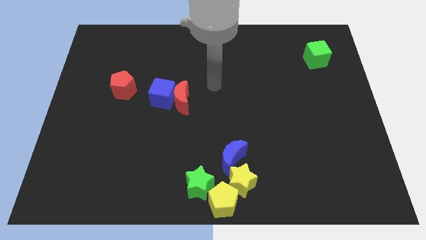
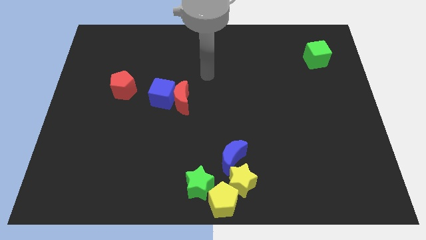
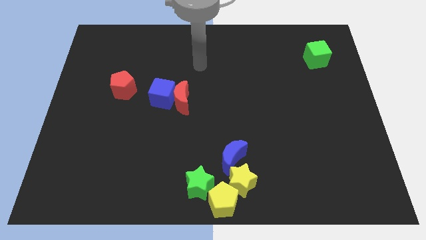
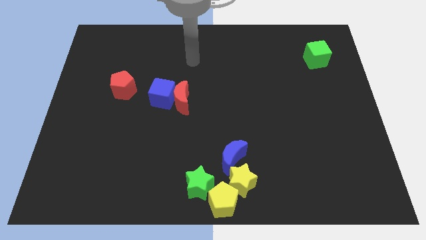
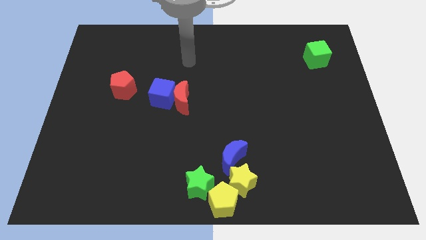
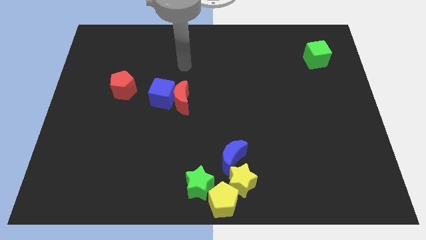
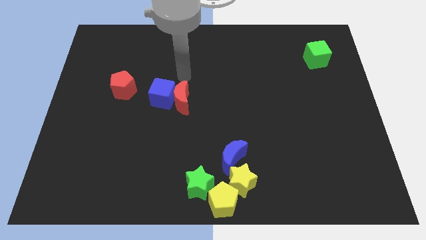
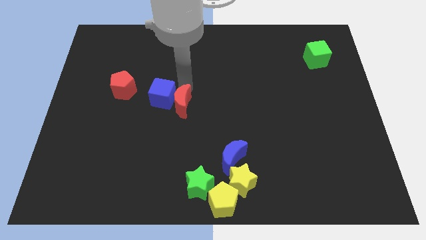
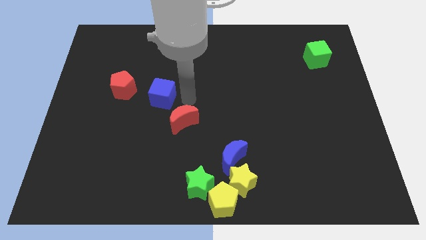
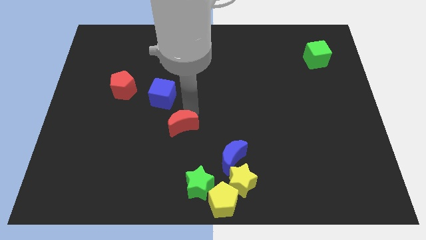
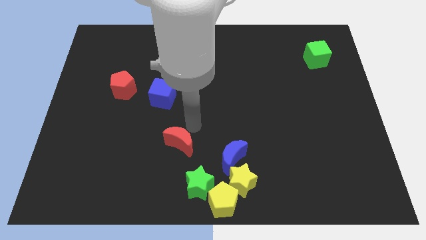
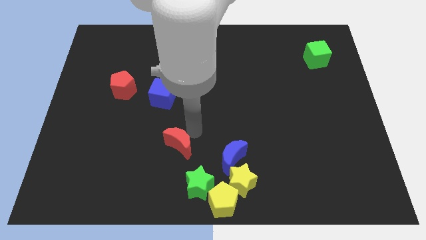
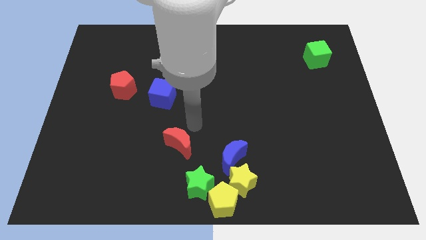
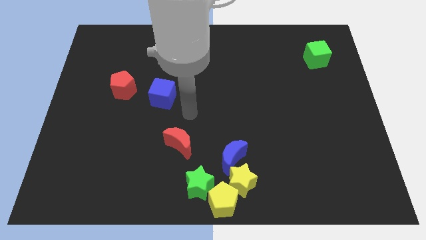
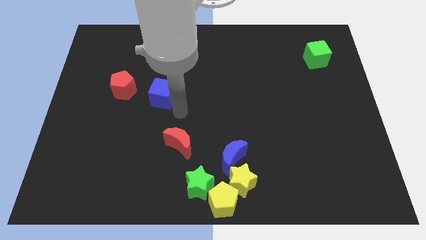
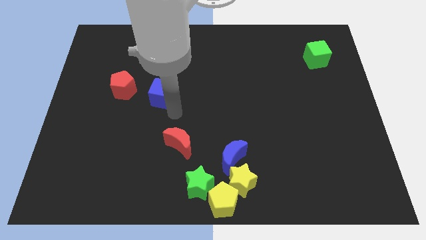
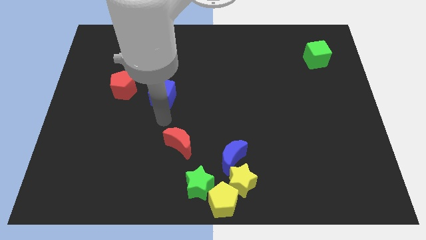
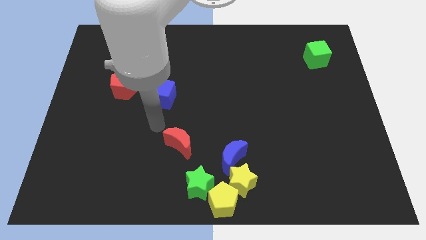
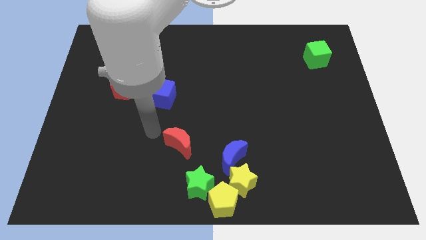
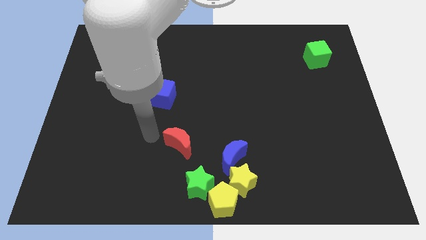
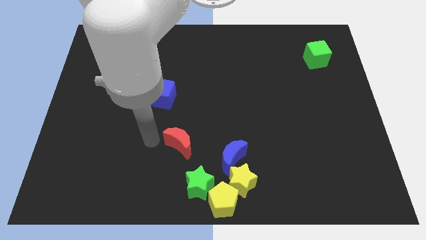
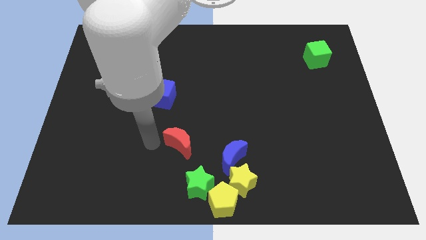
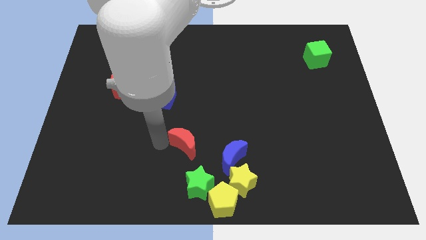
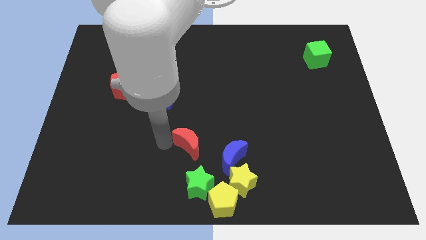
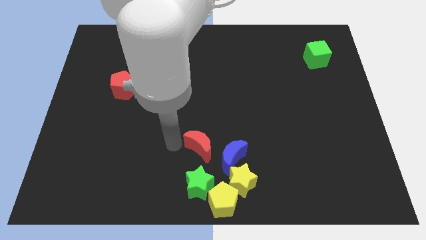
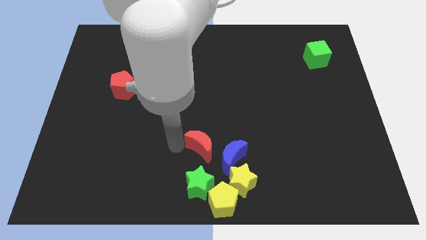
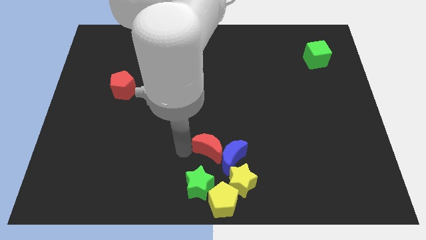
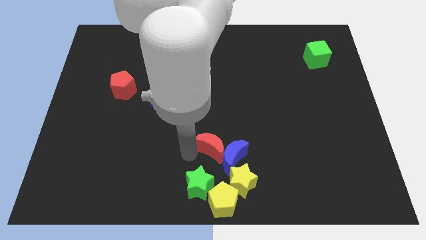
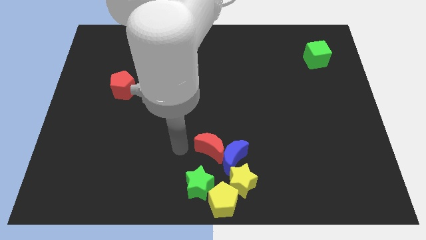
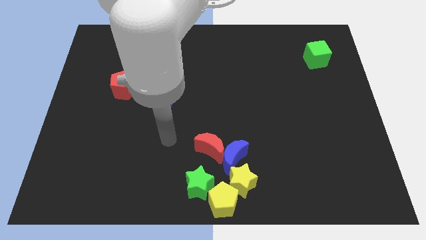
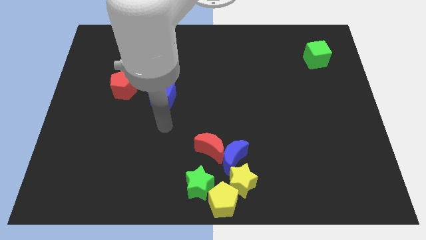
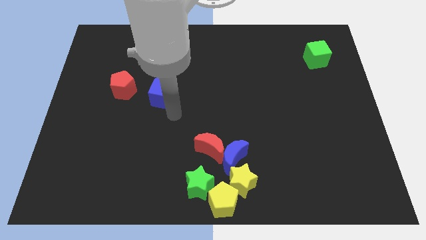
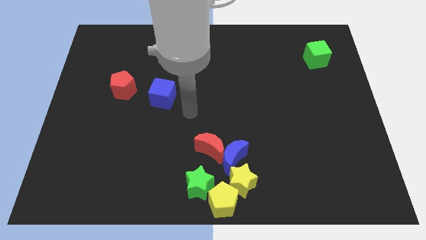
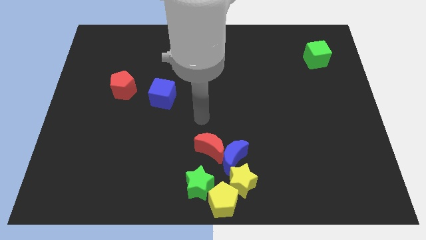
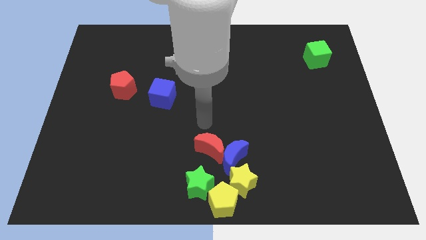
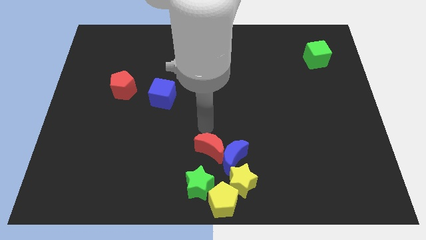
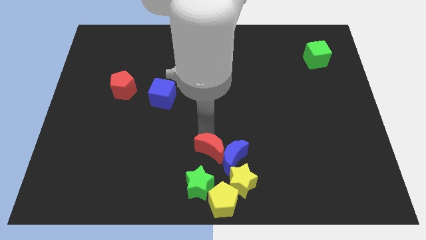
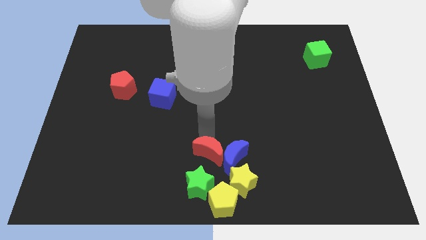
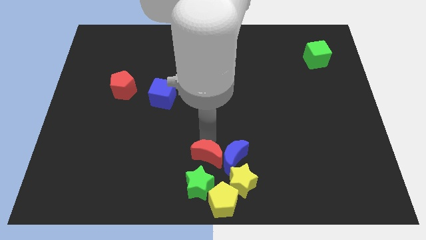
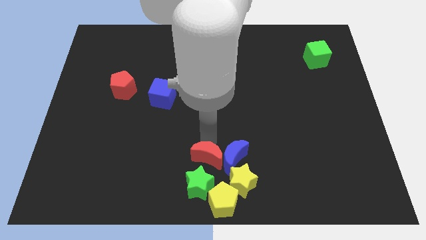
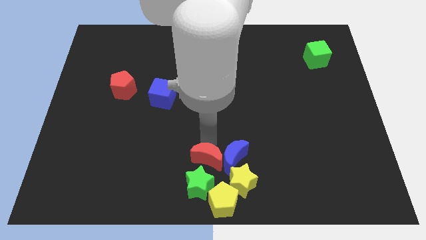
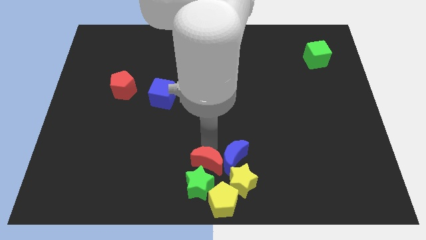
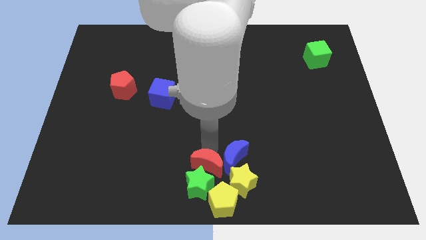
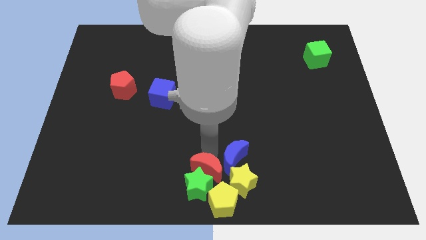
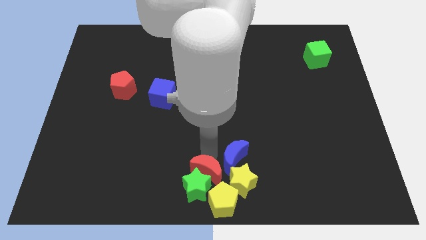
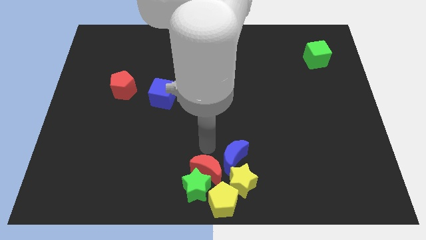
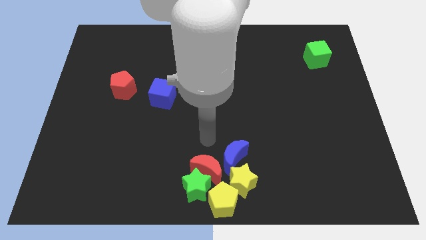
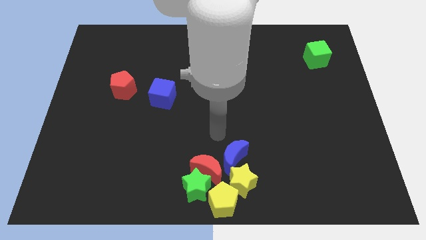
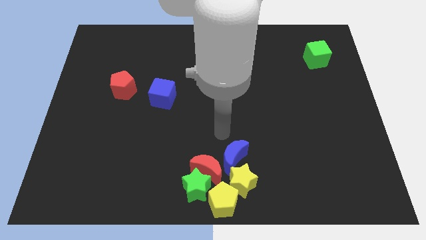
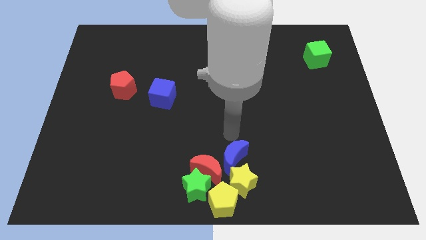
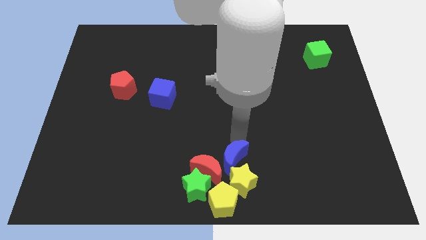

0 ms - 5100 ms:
push the red crescent into the green star

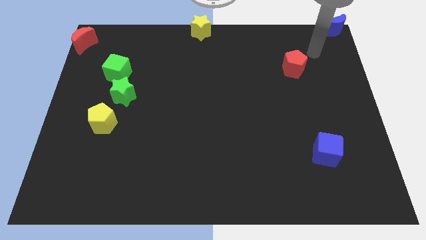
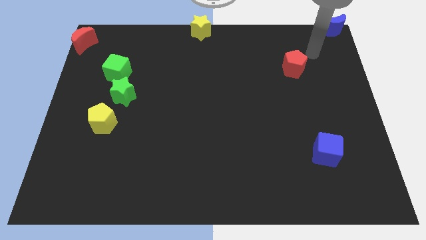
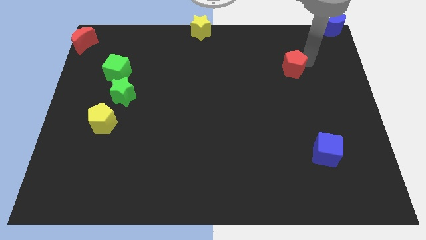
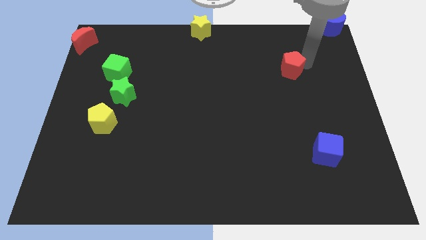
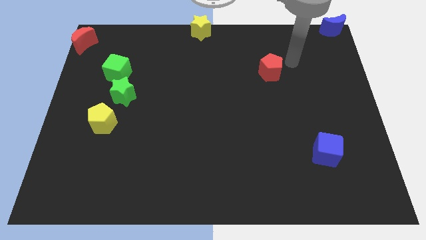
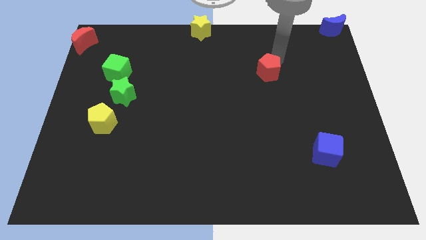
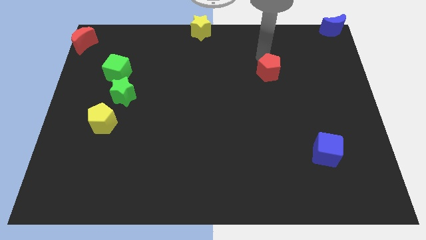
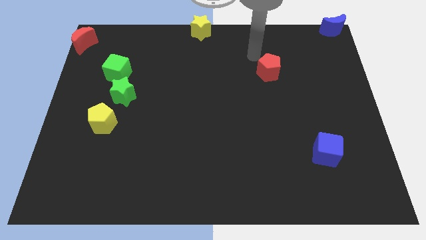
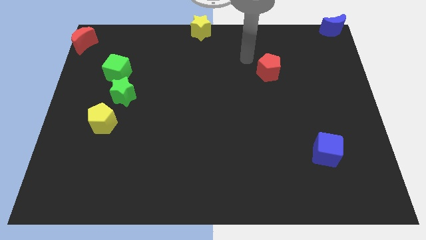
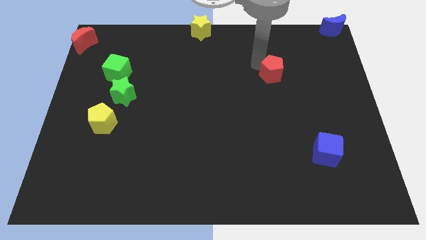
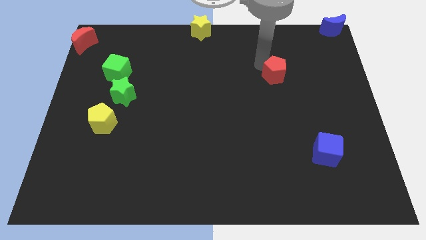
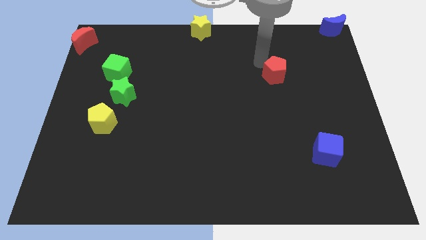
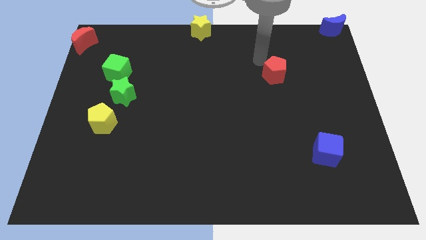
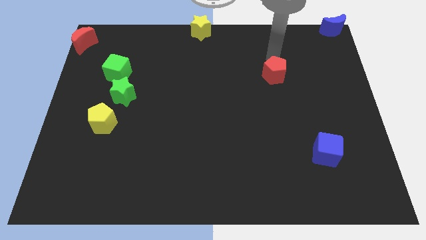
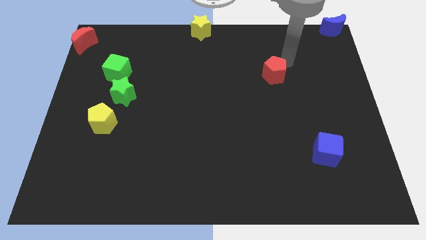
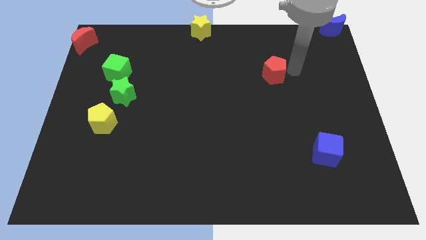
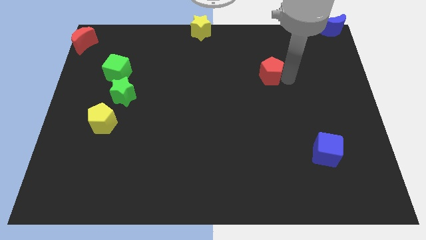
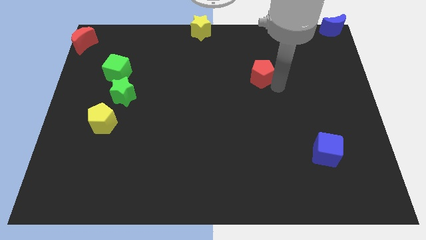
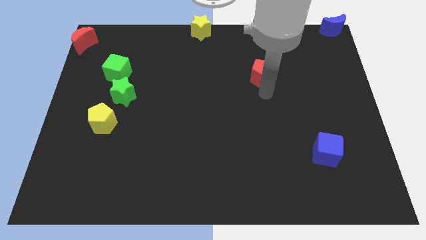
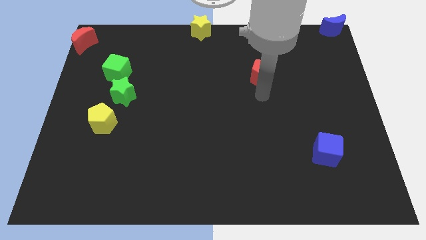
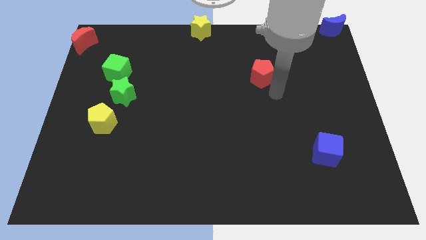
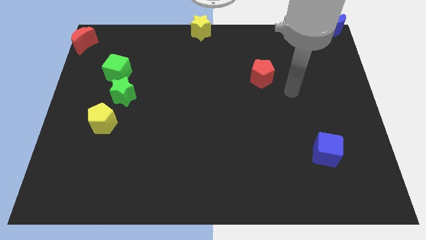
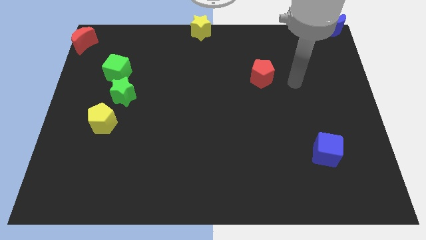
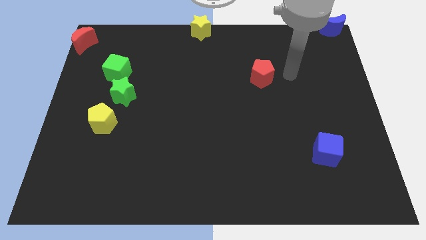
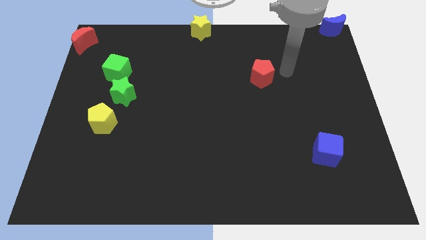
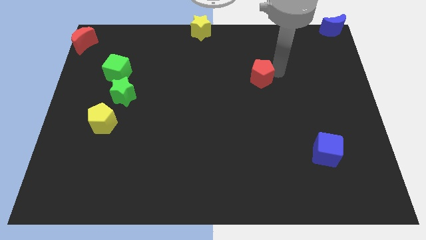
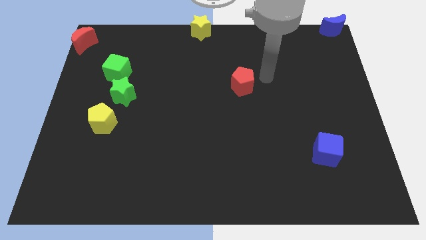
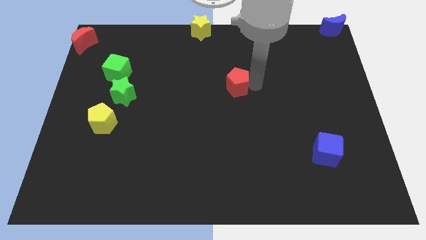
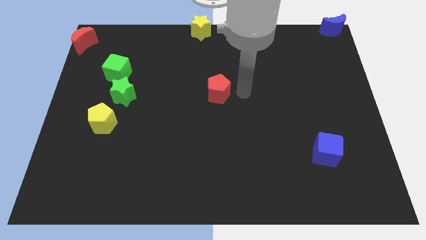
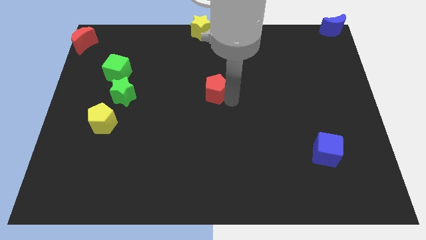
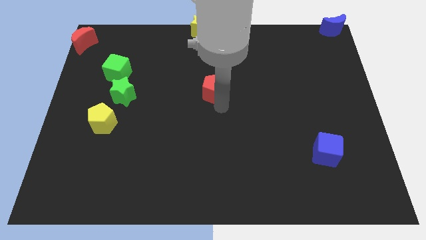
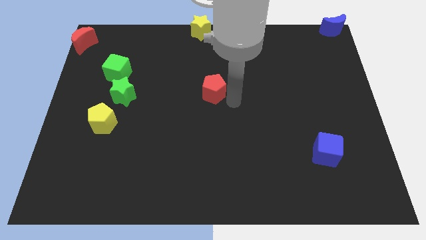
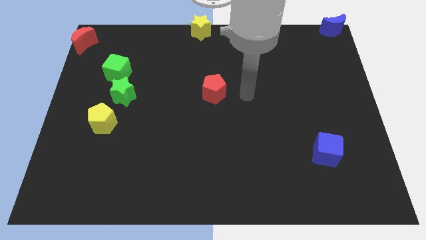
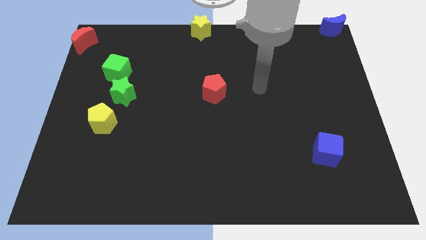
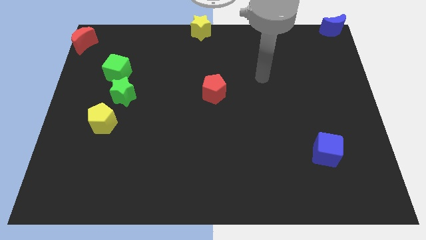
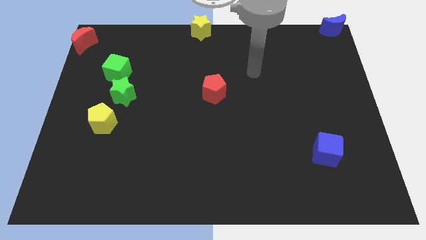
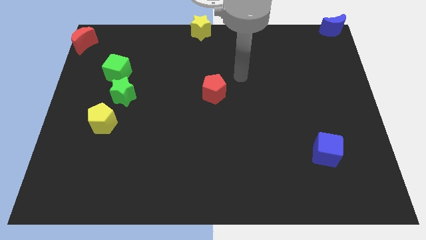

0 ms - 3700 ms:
move the red pentagon to the center of board
